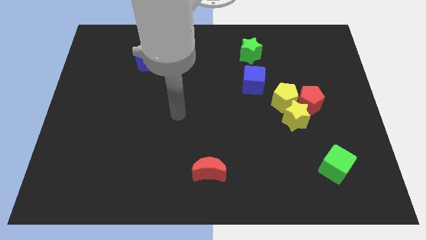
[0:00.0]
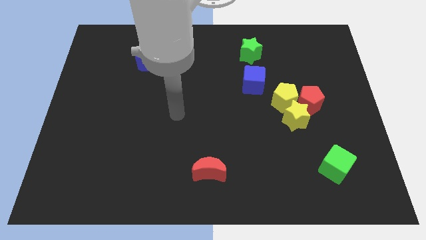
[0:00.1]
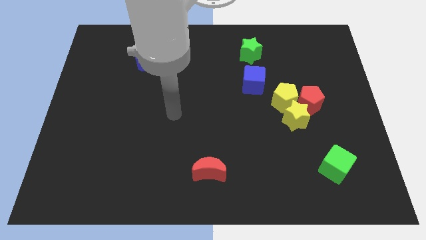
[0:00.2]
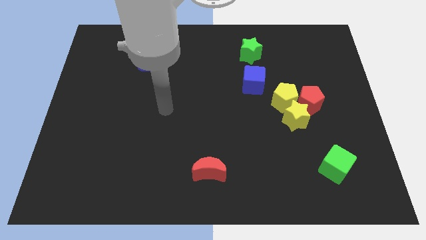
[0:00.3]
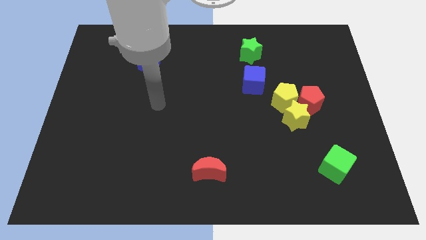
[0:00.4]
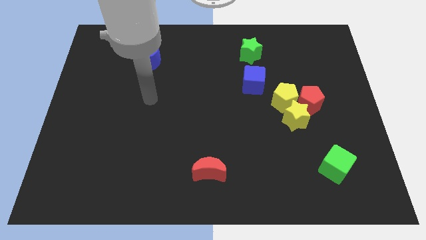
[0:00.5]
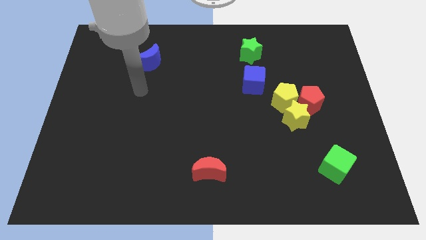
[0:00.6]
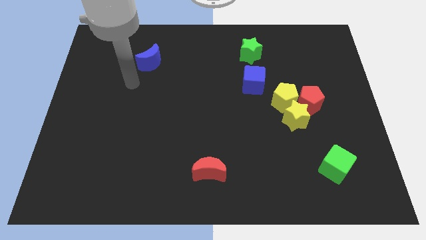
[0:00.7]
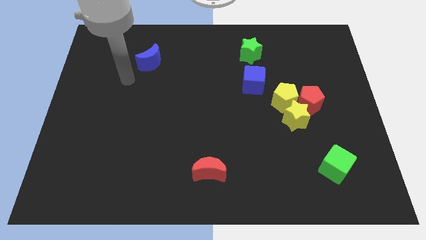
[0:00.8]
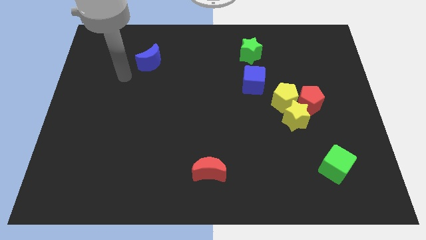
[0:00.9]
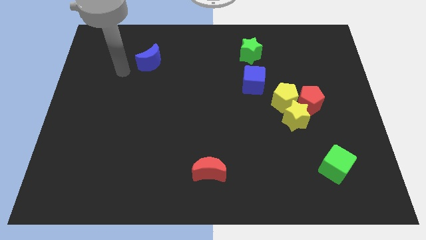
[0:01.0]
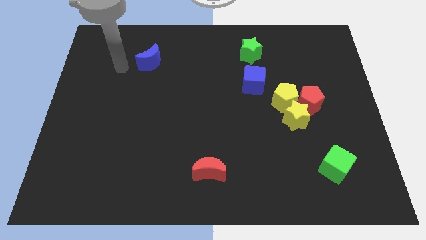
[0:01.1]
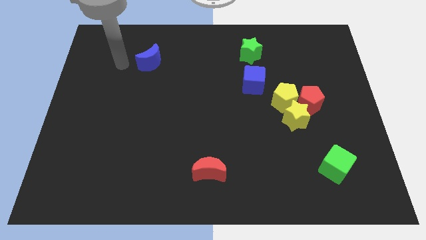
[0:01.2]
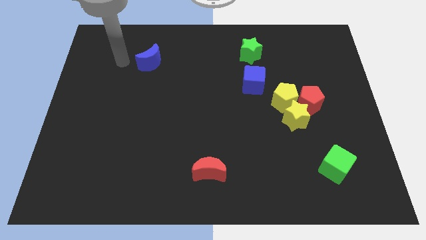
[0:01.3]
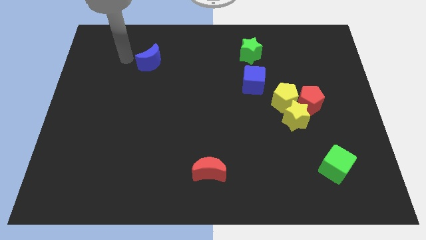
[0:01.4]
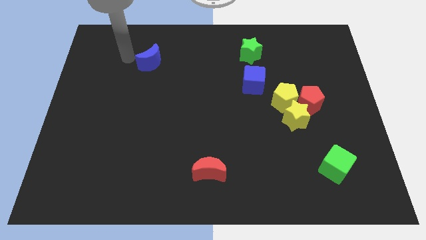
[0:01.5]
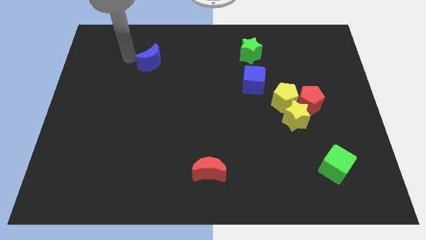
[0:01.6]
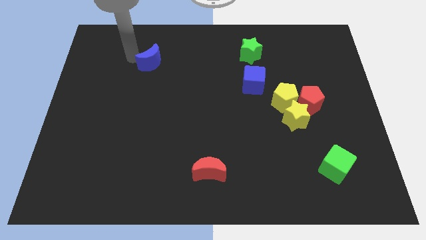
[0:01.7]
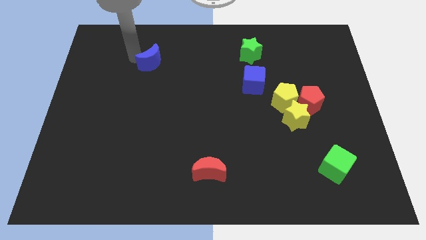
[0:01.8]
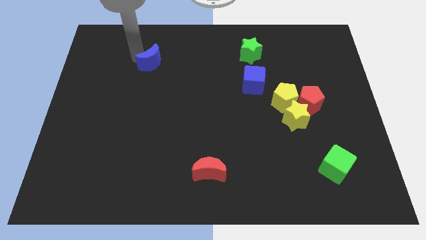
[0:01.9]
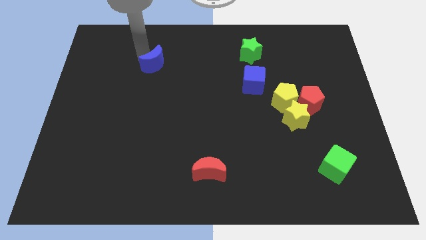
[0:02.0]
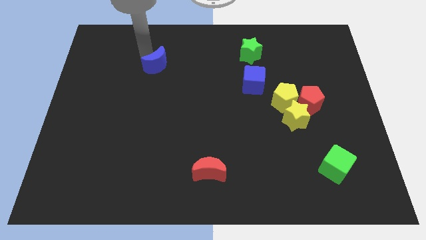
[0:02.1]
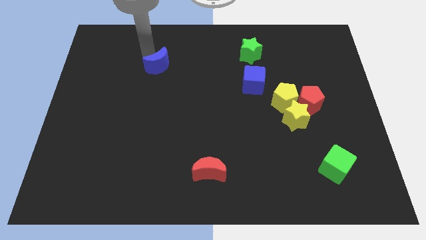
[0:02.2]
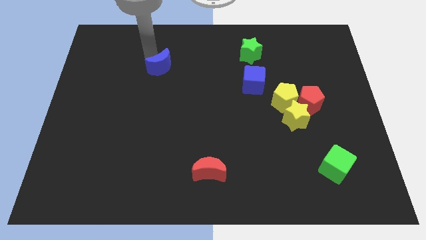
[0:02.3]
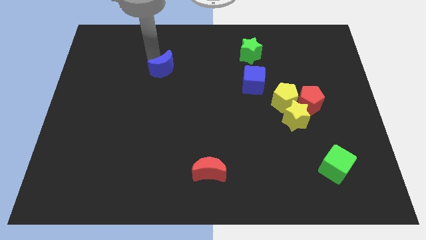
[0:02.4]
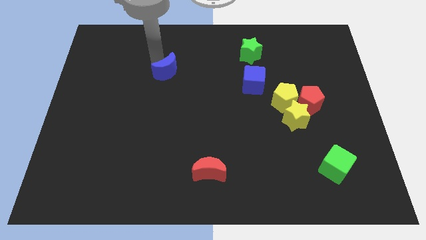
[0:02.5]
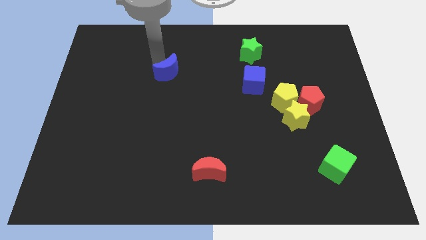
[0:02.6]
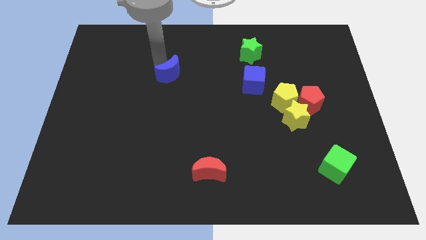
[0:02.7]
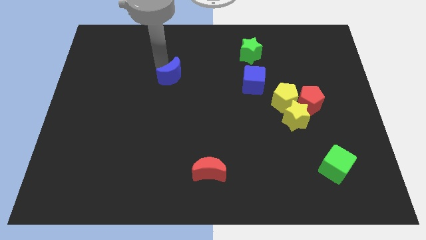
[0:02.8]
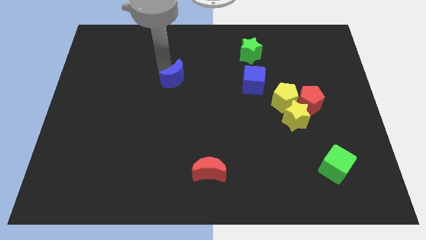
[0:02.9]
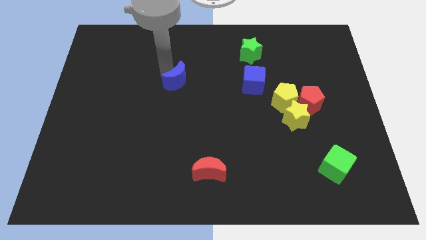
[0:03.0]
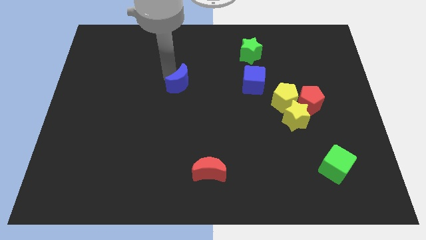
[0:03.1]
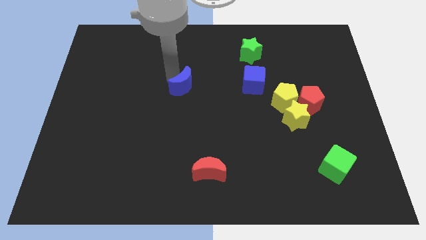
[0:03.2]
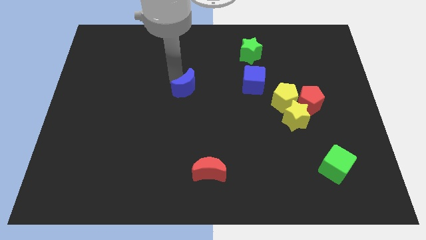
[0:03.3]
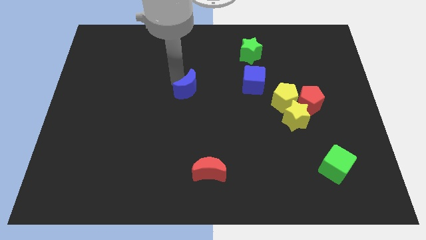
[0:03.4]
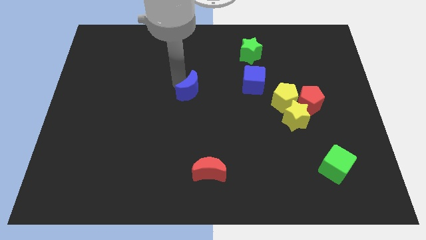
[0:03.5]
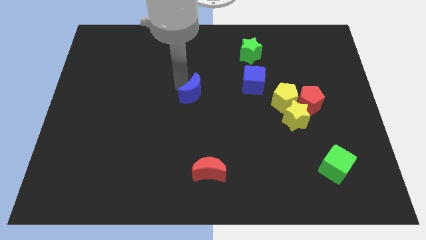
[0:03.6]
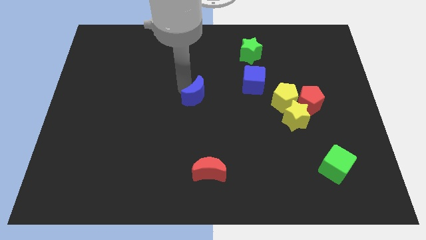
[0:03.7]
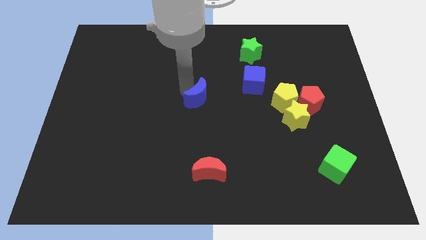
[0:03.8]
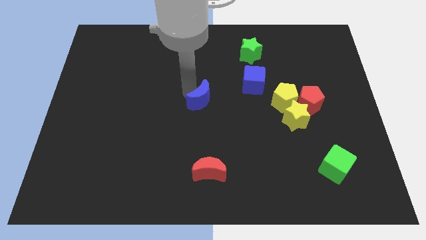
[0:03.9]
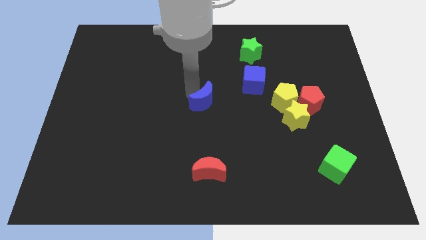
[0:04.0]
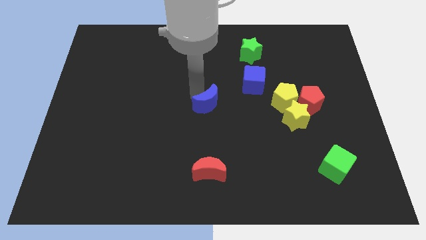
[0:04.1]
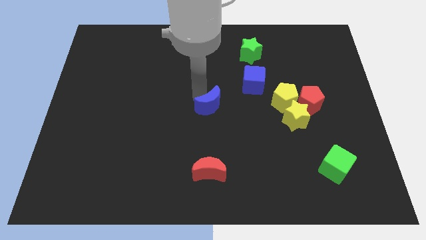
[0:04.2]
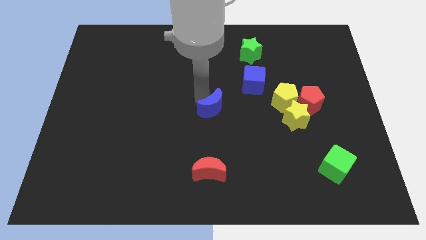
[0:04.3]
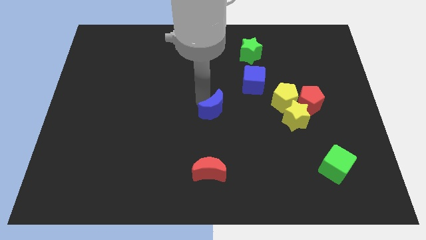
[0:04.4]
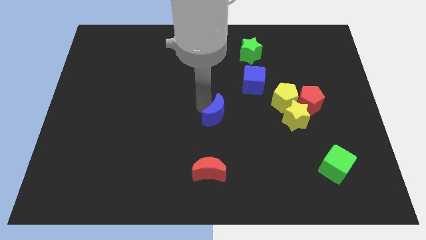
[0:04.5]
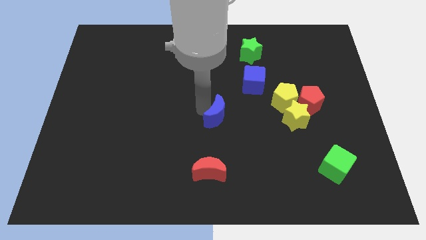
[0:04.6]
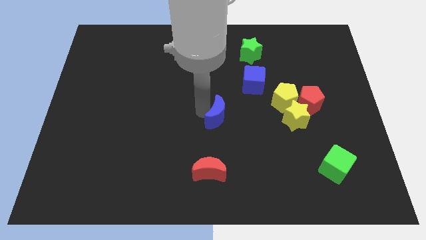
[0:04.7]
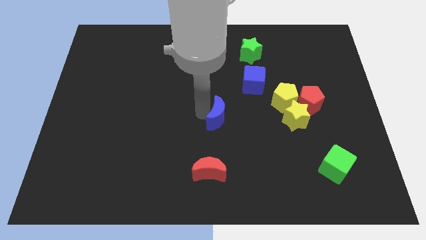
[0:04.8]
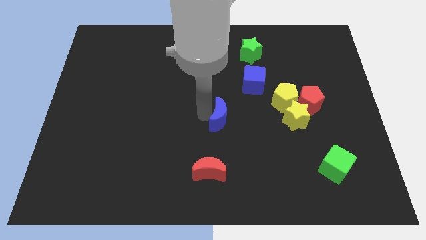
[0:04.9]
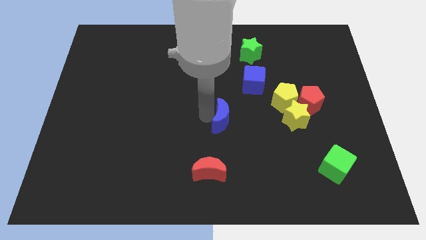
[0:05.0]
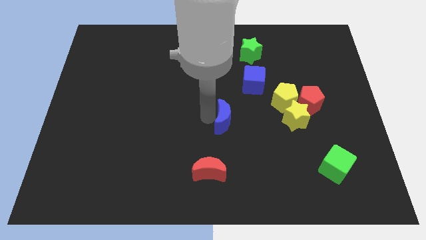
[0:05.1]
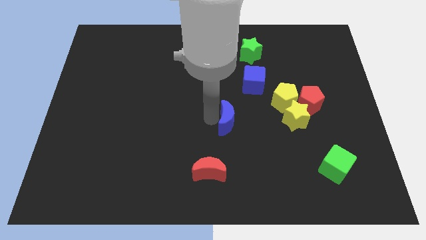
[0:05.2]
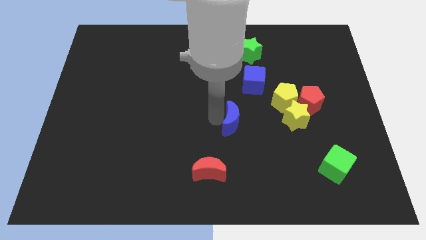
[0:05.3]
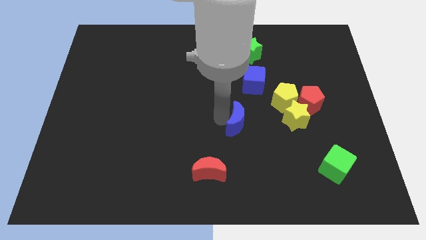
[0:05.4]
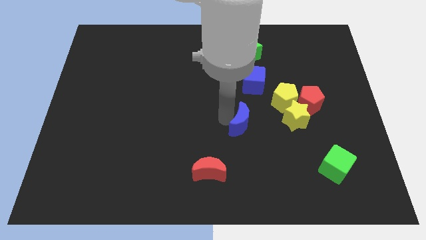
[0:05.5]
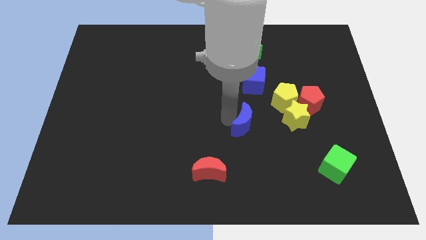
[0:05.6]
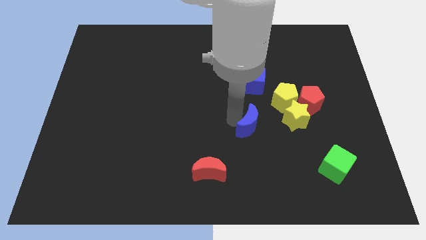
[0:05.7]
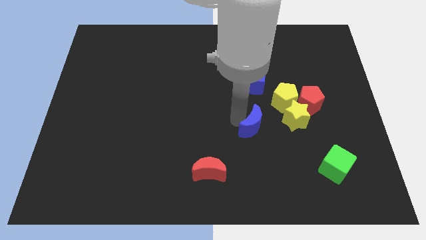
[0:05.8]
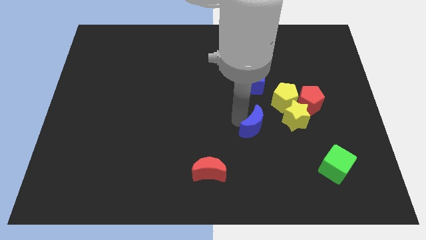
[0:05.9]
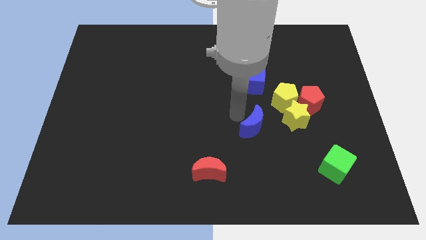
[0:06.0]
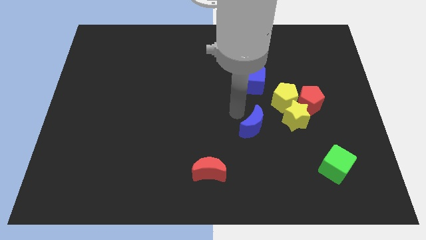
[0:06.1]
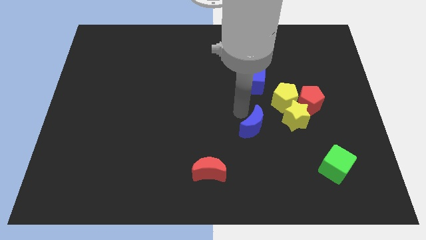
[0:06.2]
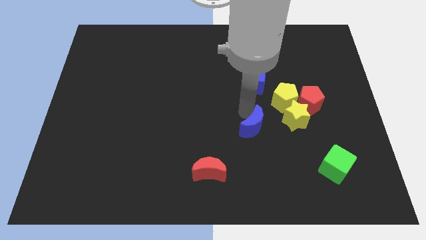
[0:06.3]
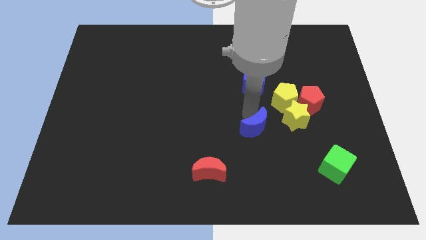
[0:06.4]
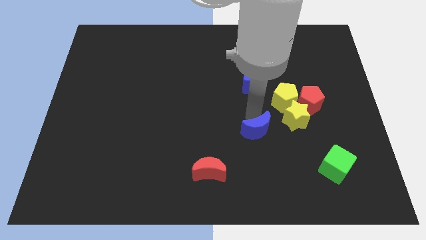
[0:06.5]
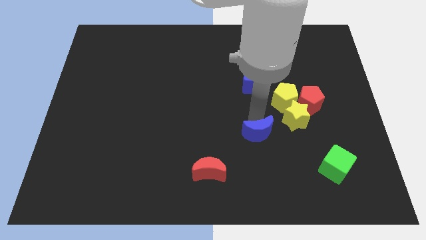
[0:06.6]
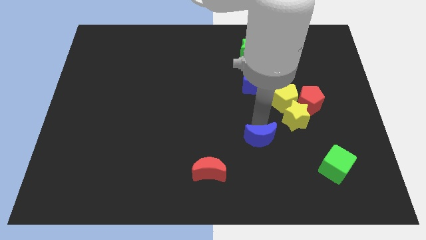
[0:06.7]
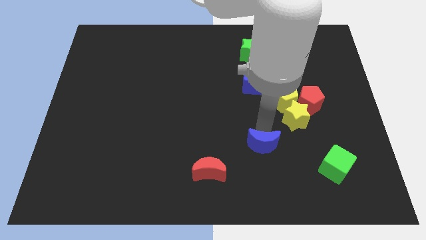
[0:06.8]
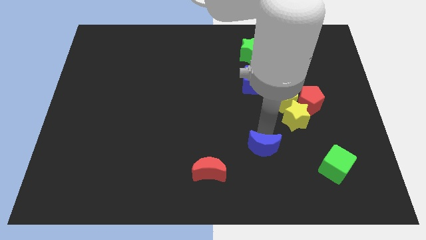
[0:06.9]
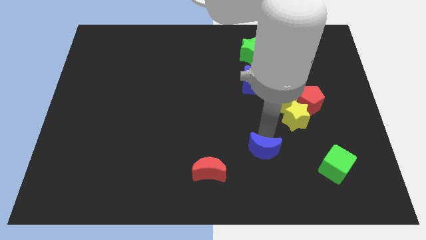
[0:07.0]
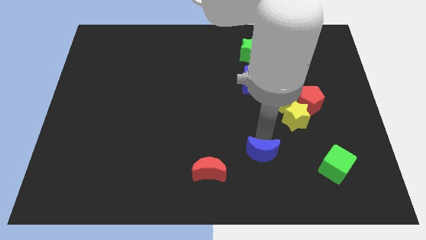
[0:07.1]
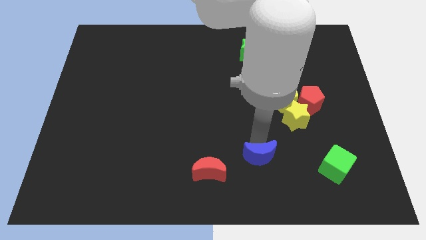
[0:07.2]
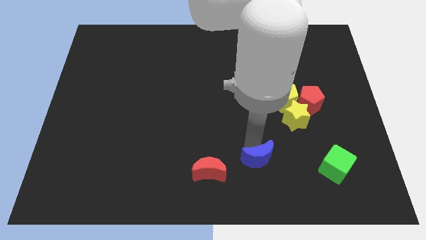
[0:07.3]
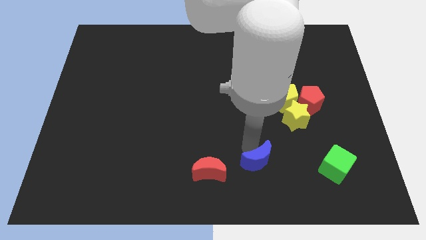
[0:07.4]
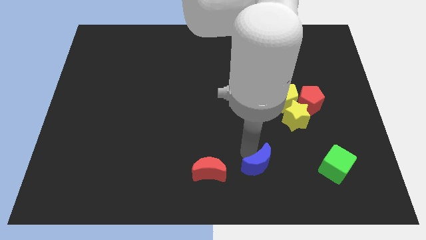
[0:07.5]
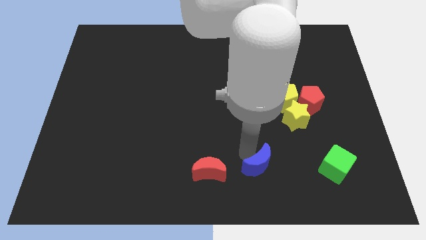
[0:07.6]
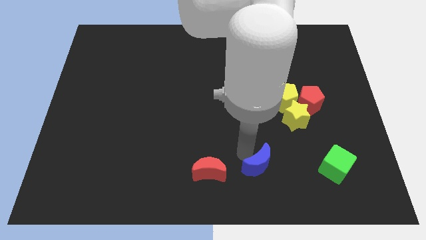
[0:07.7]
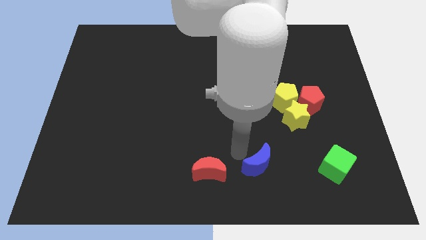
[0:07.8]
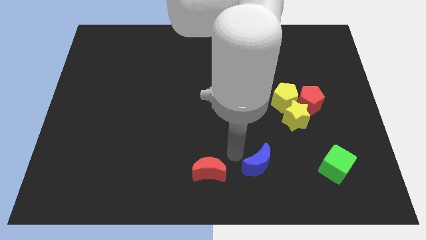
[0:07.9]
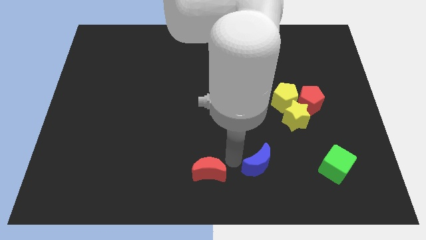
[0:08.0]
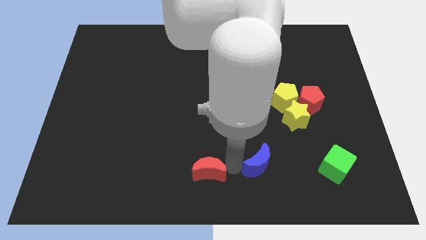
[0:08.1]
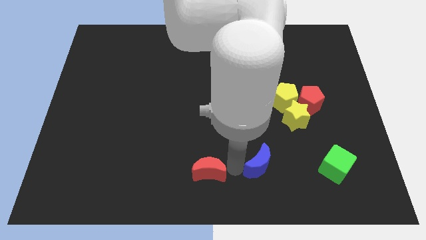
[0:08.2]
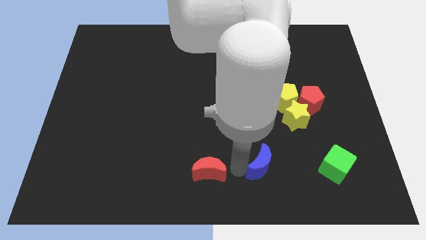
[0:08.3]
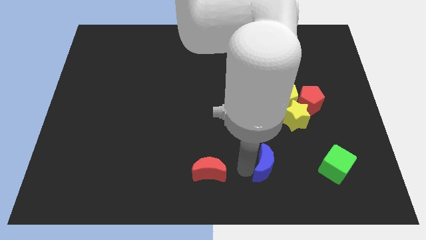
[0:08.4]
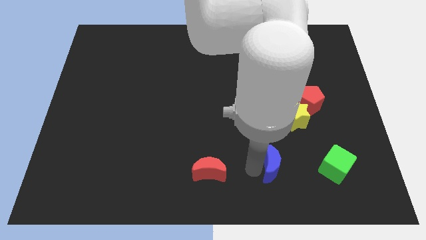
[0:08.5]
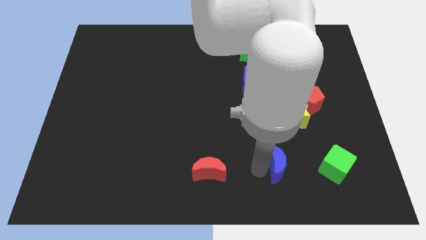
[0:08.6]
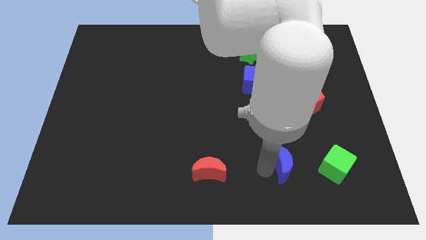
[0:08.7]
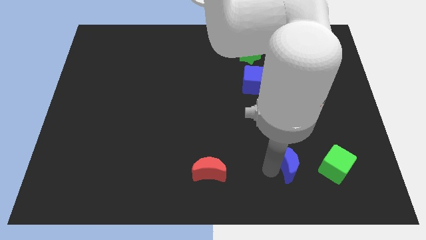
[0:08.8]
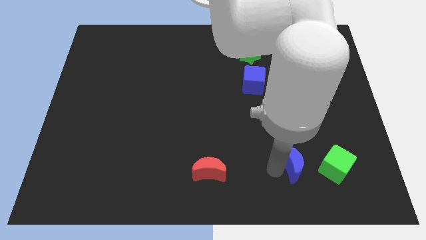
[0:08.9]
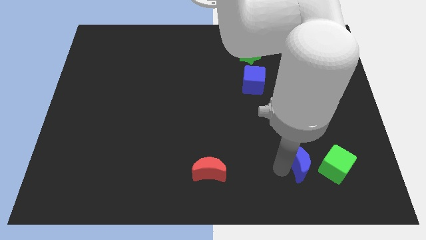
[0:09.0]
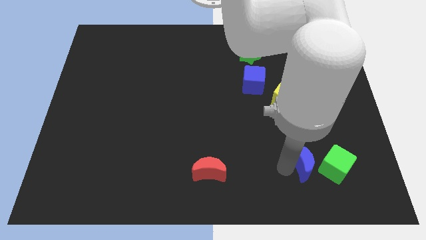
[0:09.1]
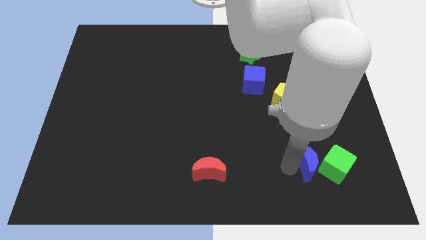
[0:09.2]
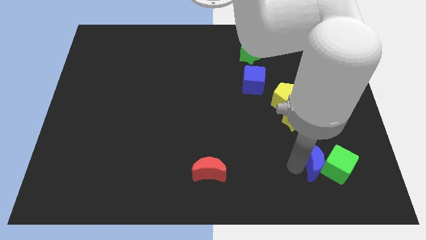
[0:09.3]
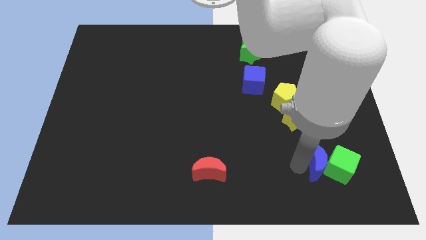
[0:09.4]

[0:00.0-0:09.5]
push the blue moon towards the green cube
